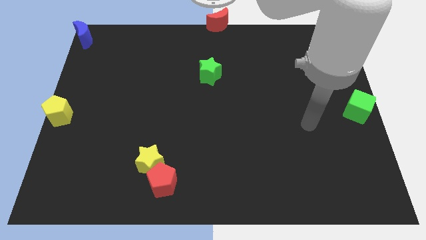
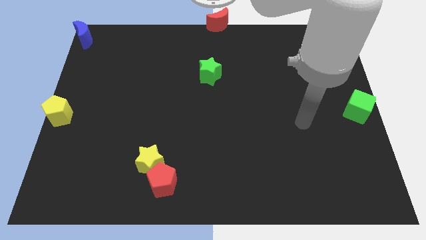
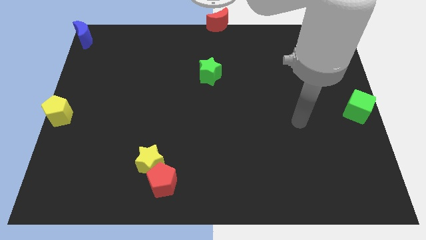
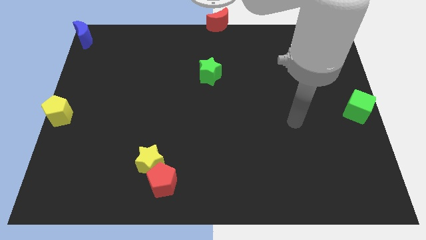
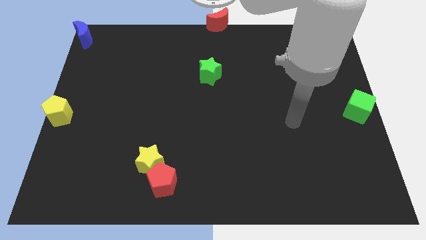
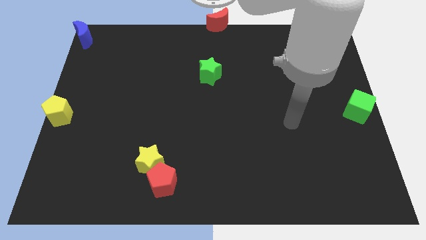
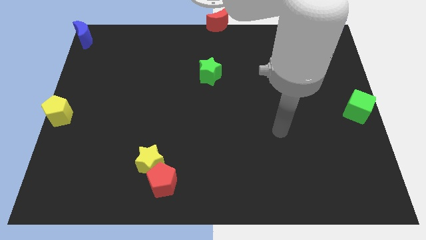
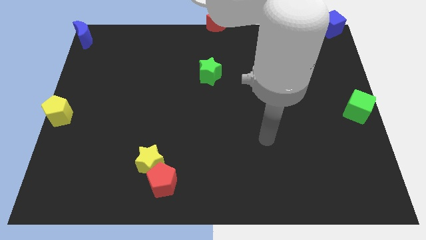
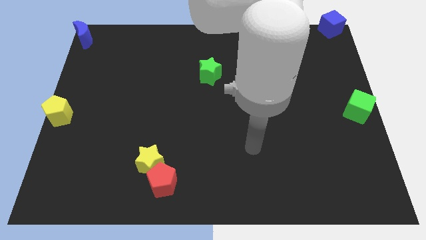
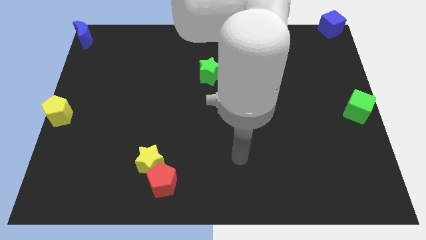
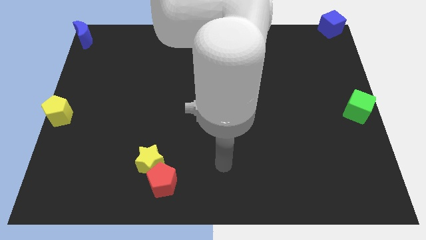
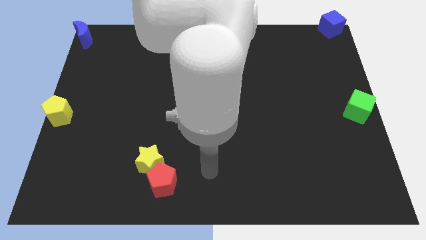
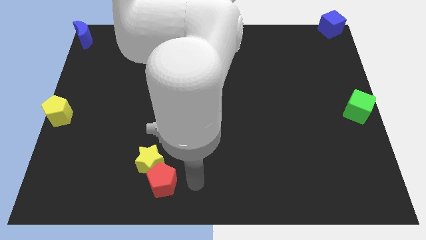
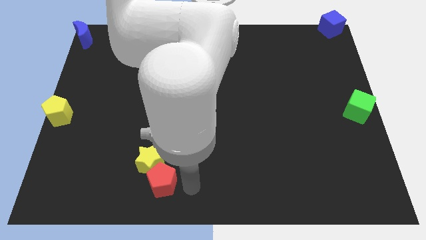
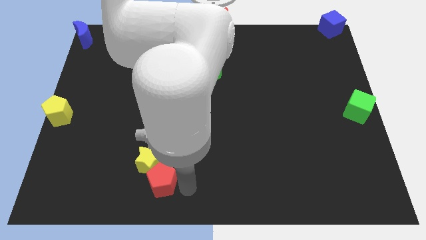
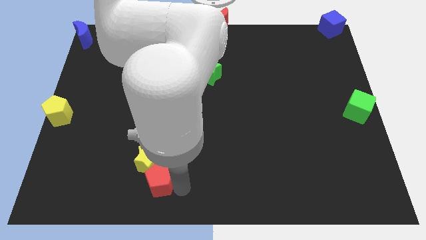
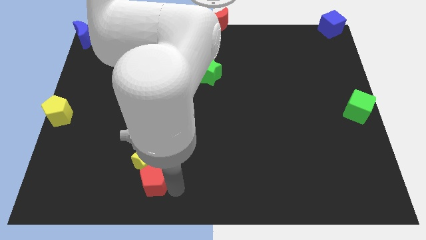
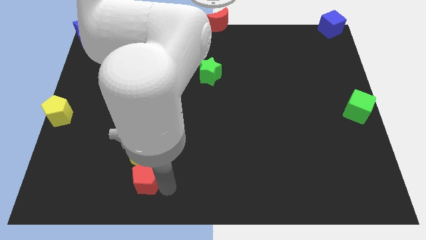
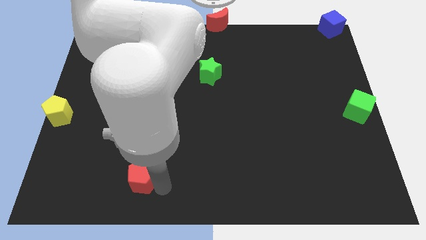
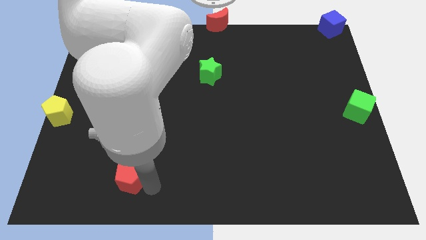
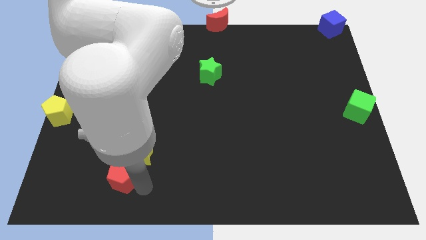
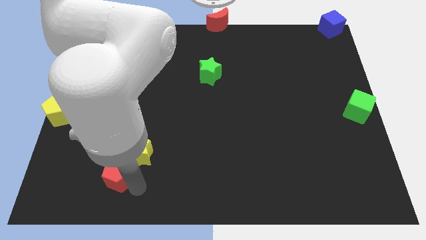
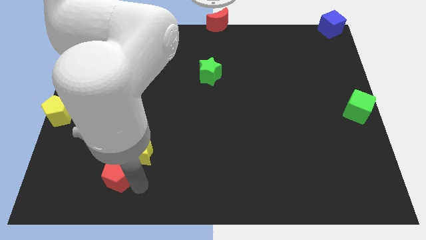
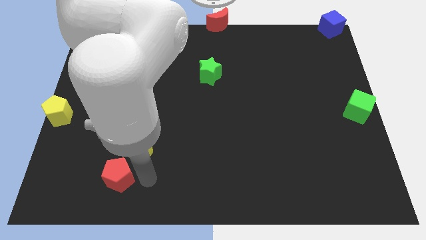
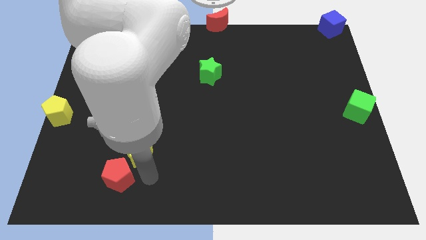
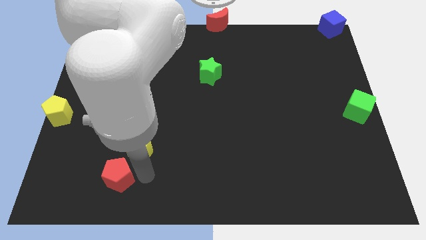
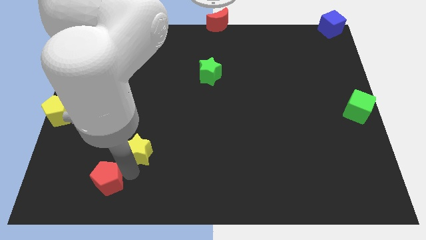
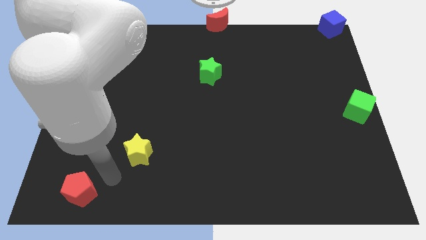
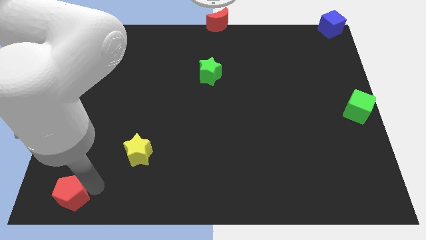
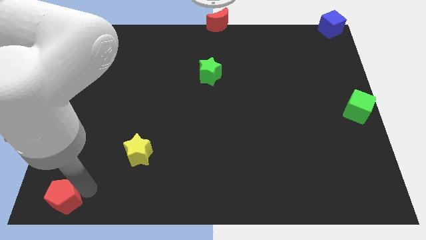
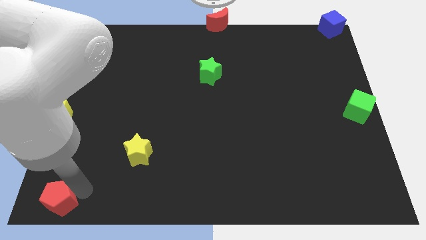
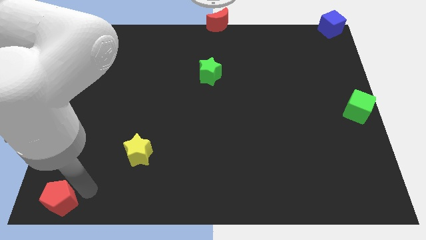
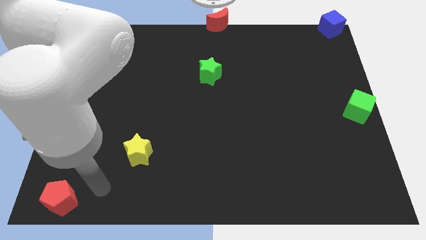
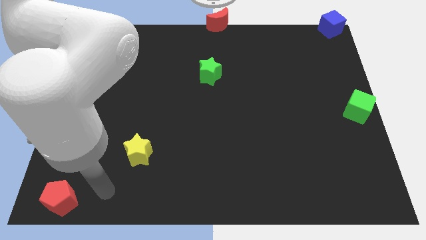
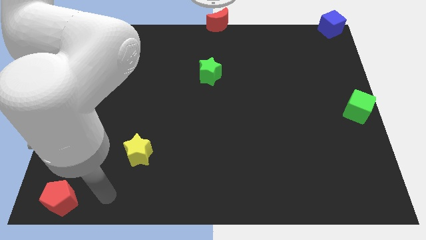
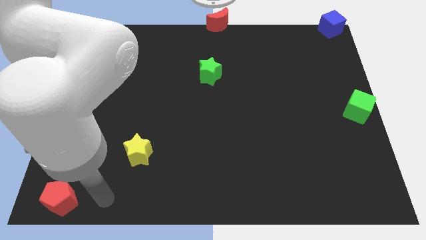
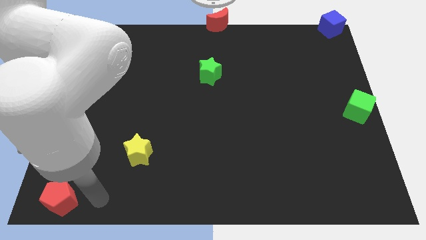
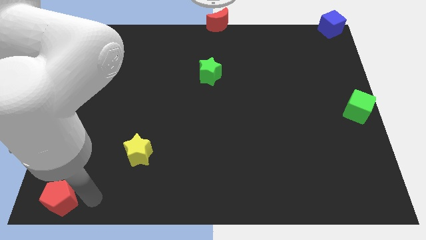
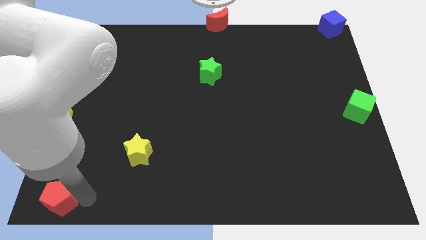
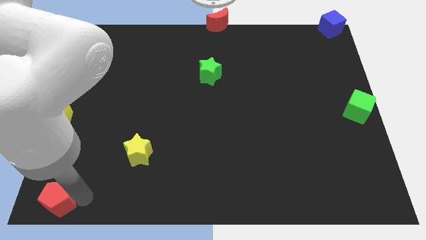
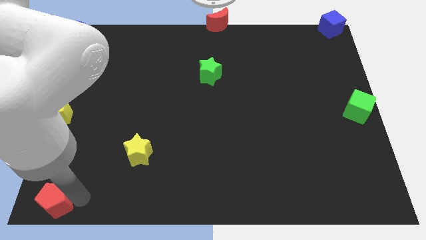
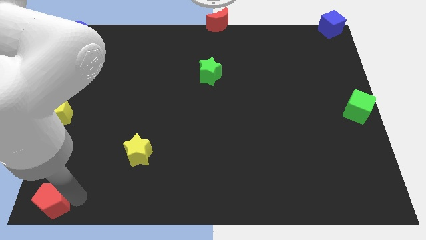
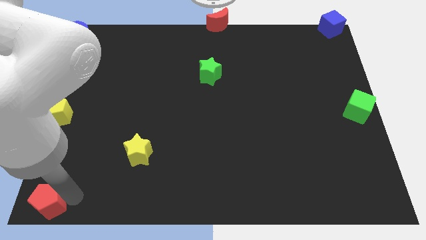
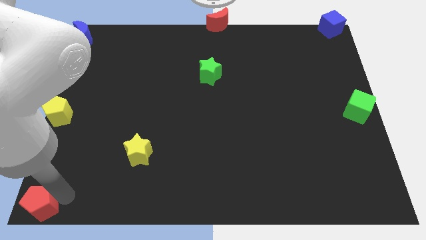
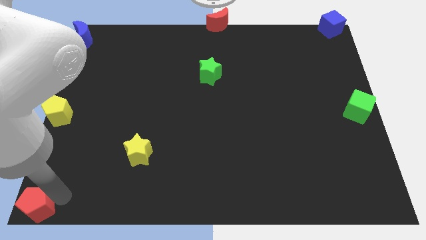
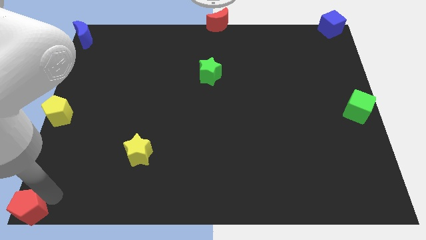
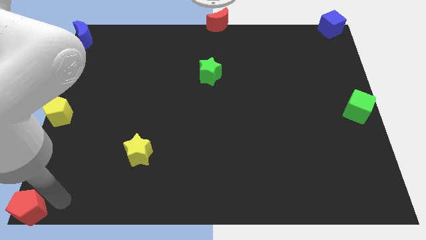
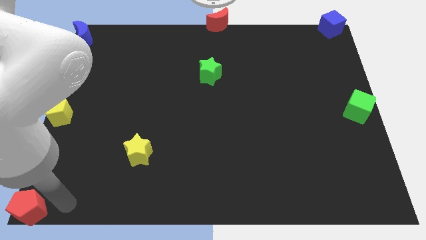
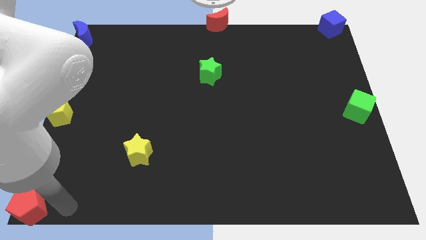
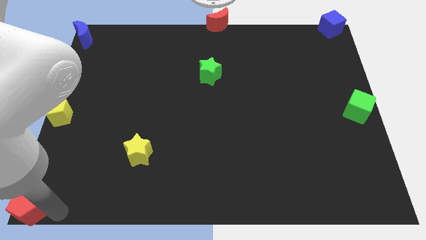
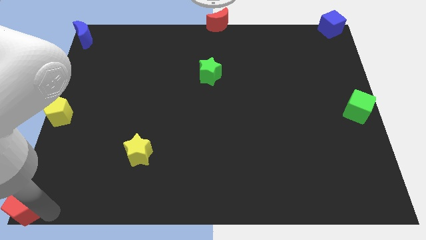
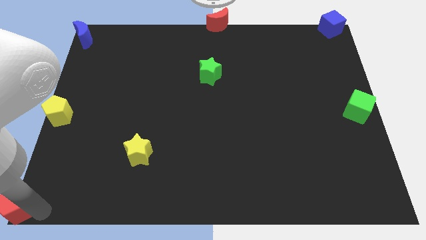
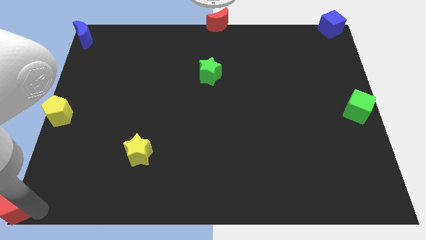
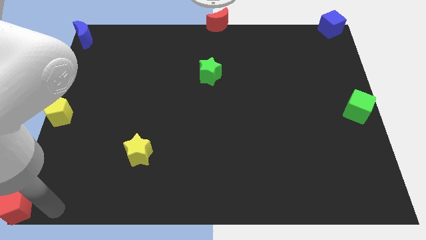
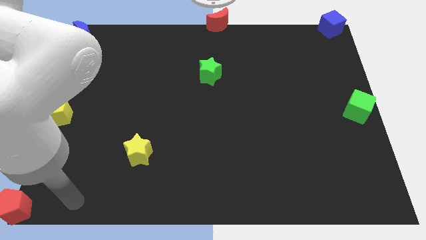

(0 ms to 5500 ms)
slide the red pentagon to the bottom left corner of the board

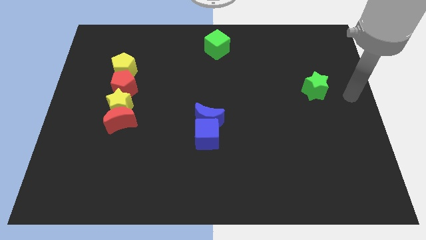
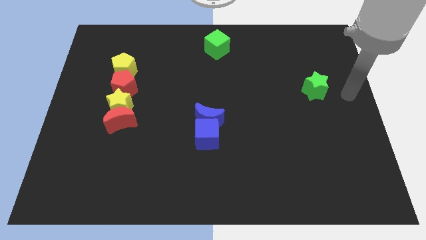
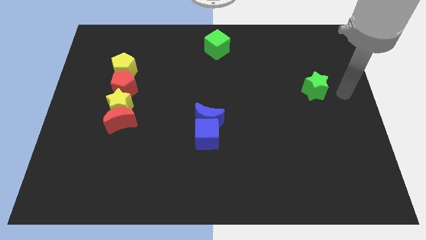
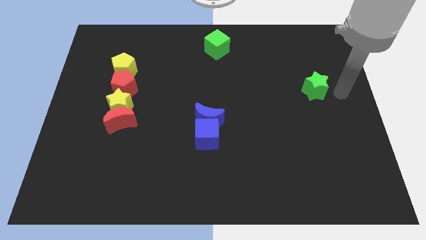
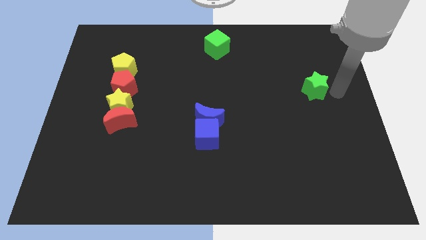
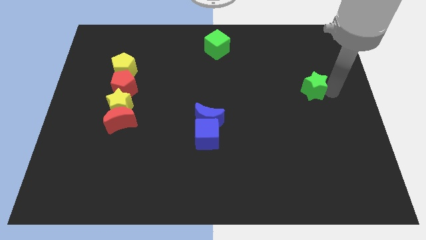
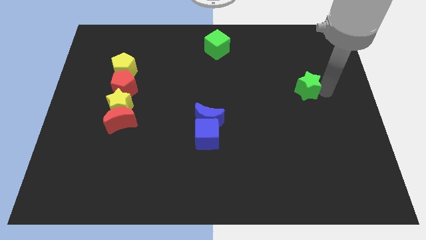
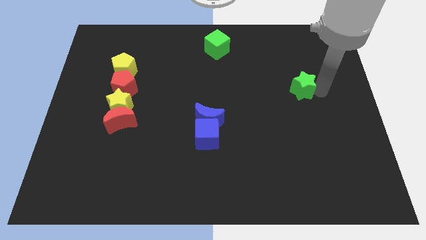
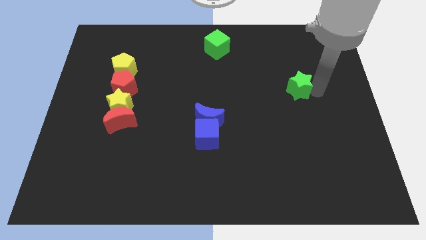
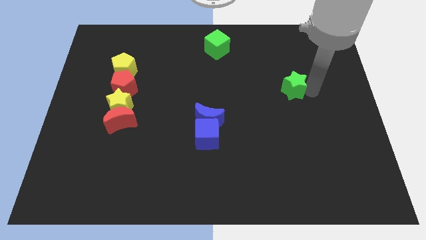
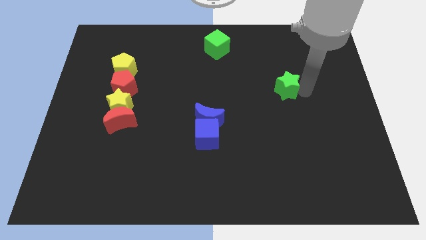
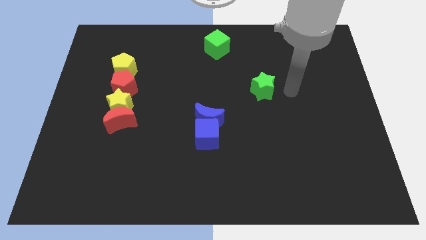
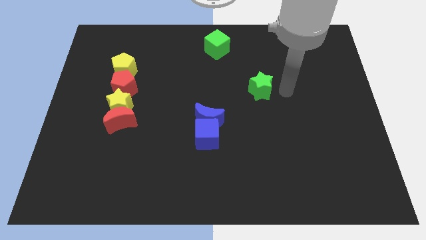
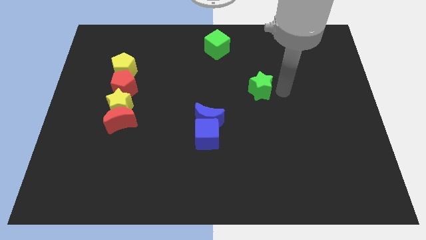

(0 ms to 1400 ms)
slide the green star towards the left

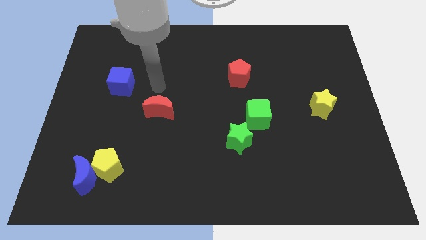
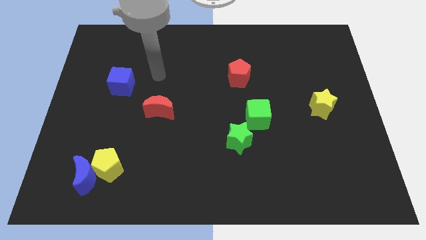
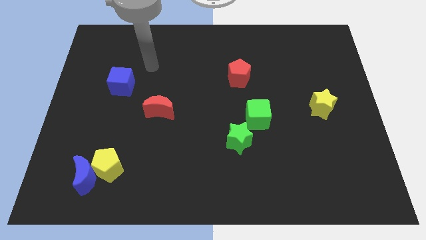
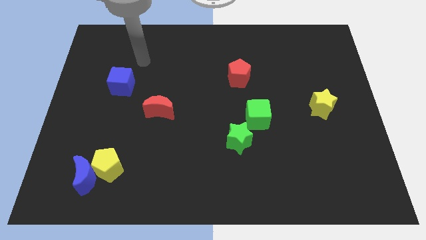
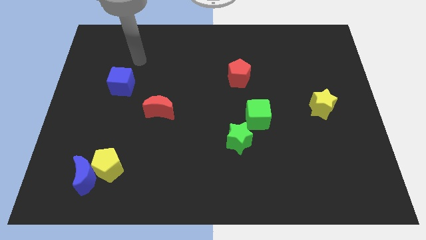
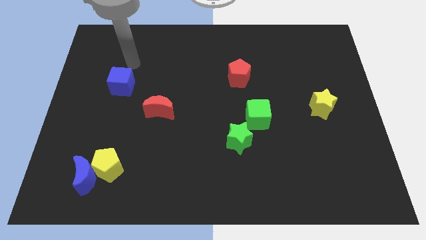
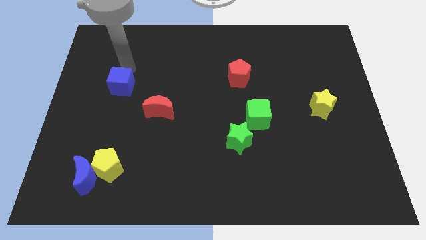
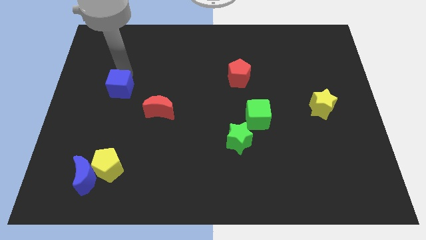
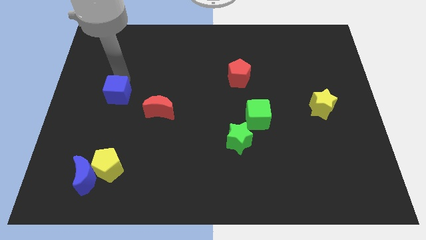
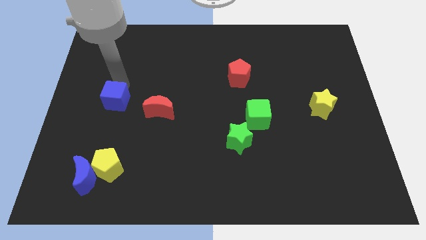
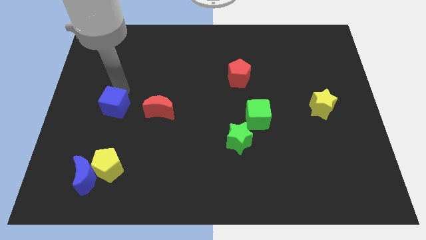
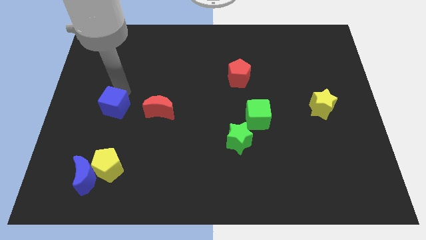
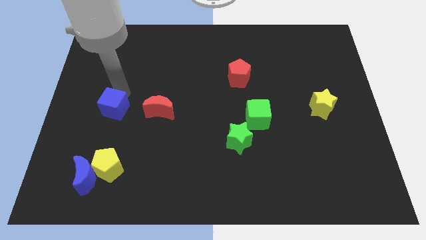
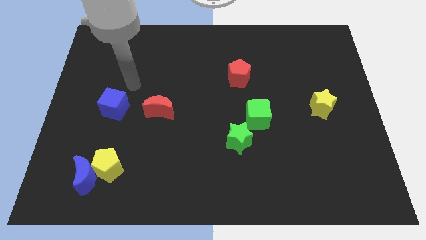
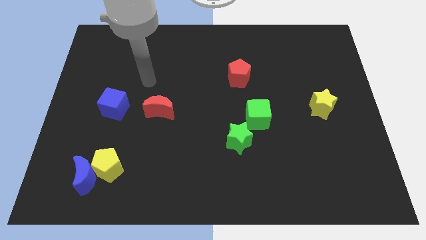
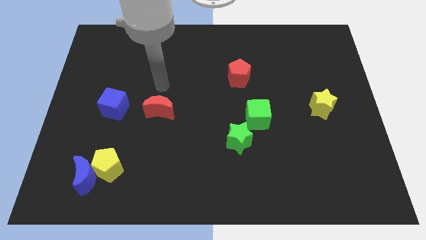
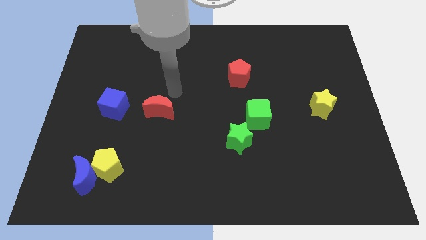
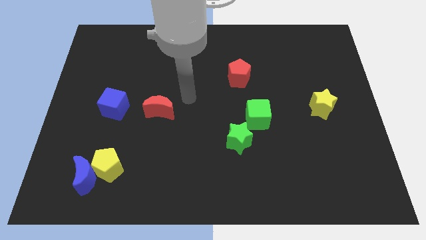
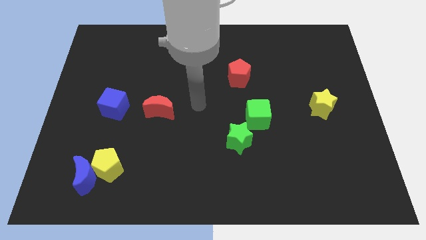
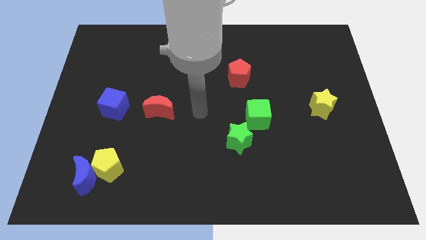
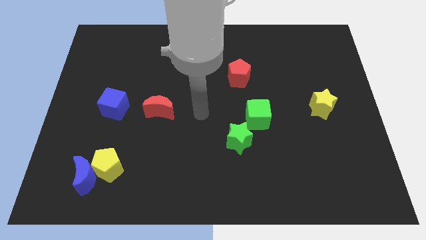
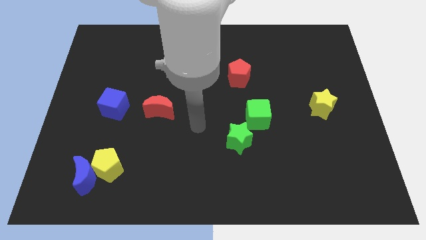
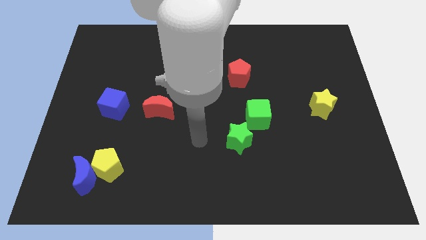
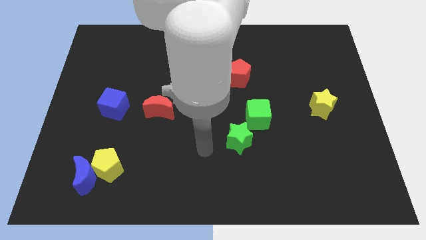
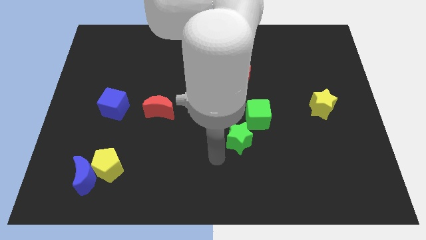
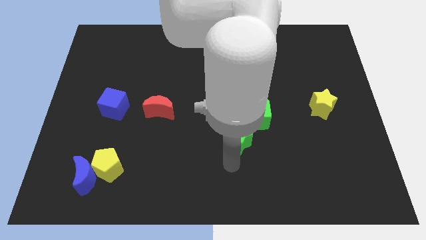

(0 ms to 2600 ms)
push the blue cube slightly to the bottom
